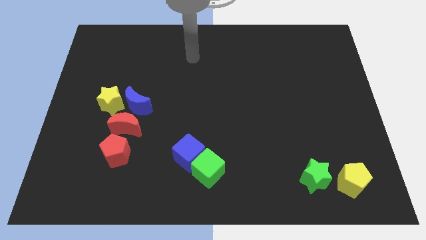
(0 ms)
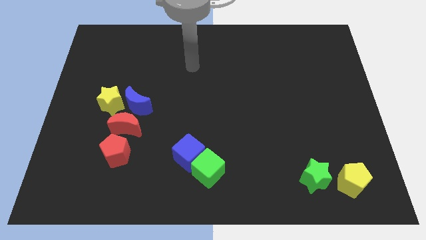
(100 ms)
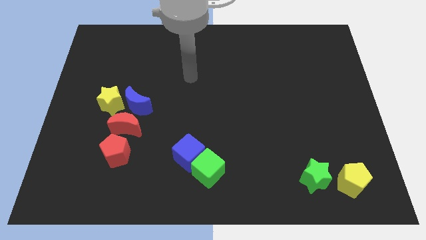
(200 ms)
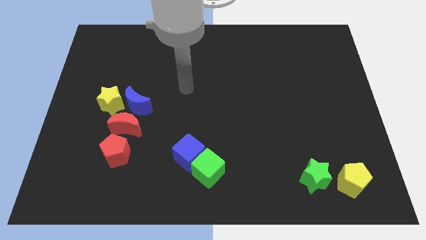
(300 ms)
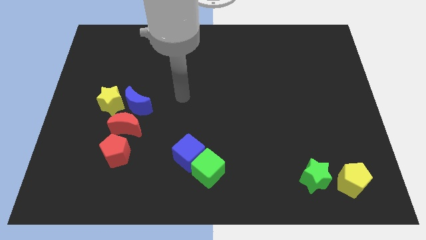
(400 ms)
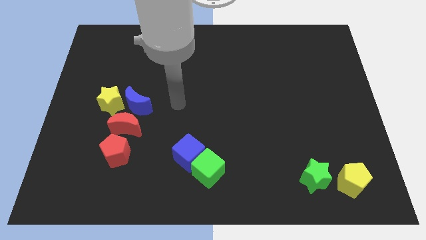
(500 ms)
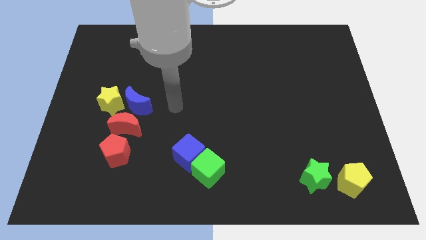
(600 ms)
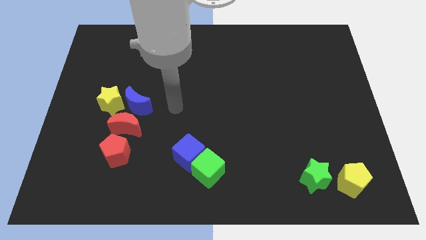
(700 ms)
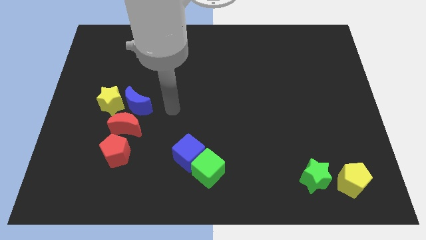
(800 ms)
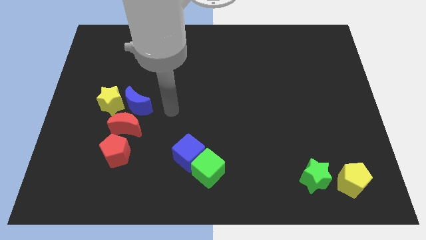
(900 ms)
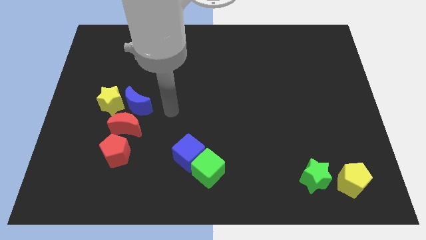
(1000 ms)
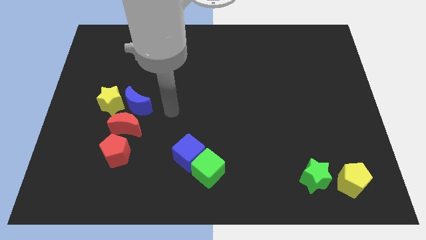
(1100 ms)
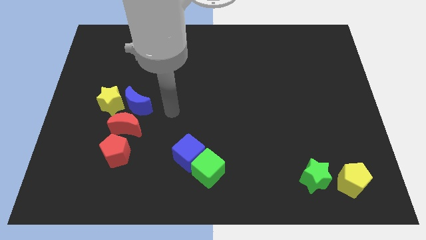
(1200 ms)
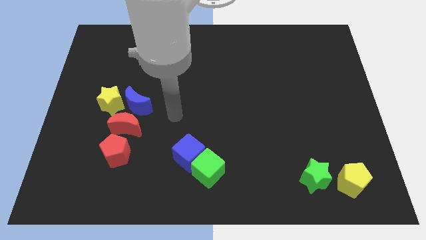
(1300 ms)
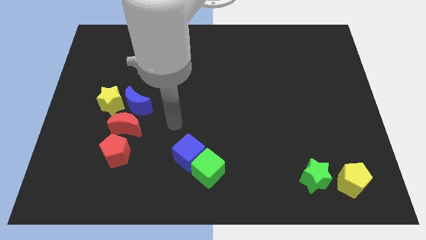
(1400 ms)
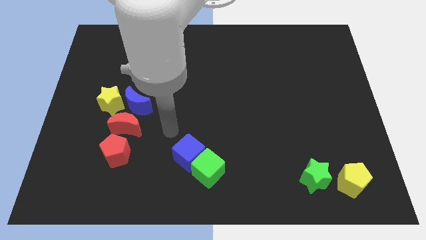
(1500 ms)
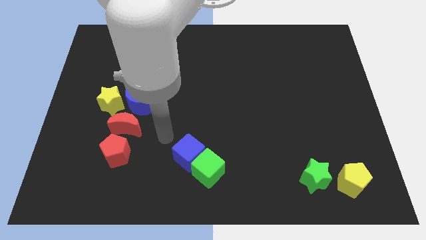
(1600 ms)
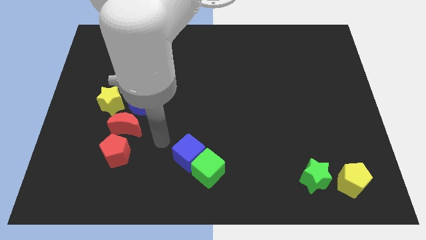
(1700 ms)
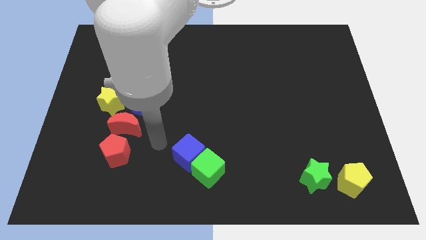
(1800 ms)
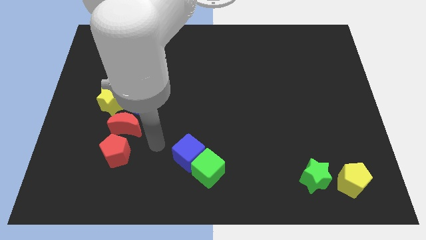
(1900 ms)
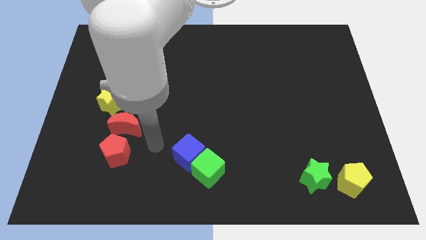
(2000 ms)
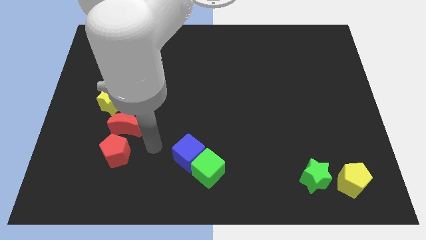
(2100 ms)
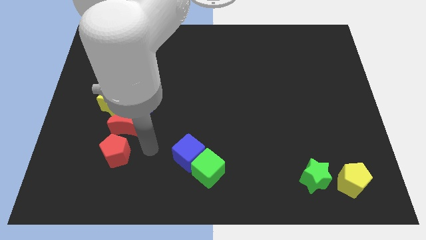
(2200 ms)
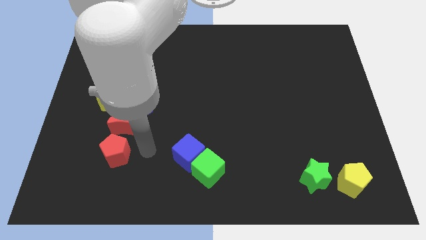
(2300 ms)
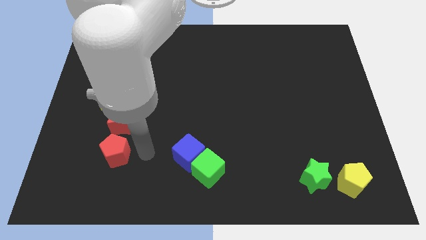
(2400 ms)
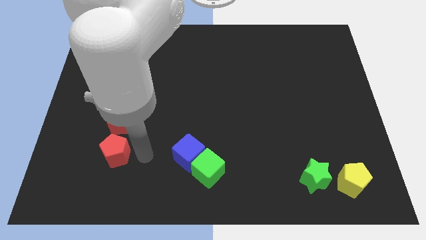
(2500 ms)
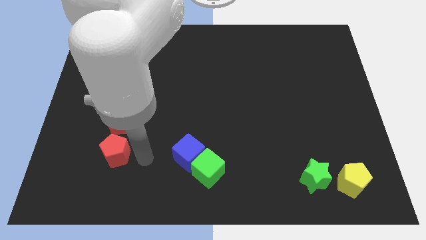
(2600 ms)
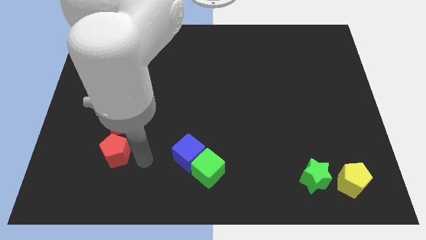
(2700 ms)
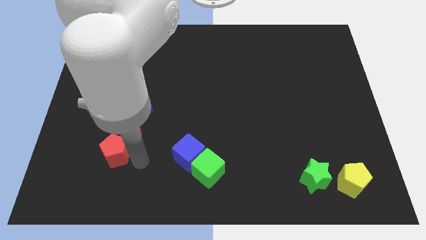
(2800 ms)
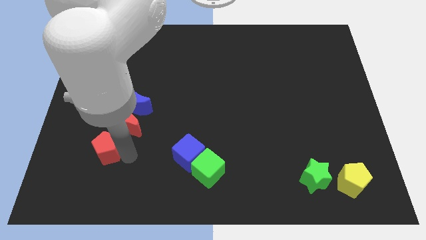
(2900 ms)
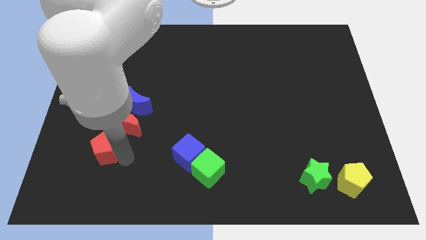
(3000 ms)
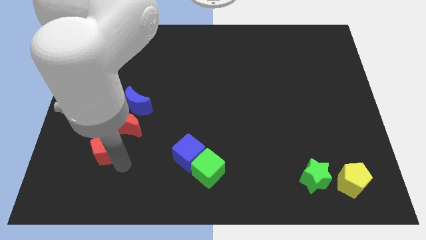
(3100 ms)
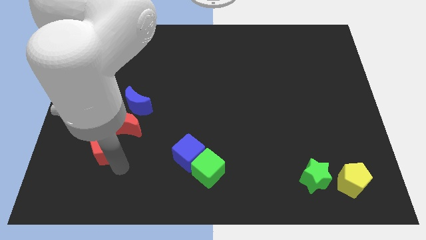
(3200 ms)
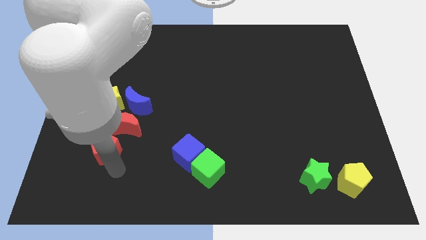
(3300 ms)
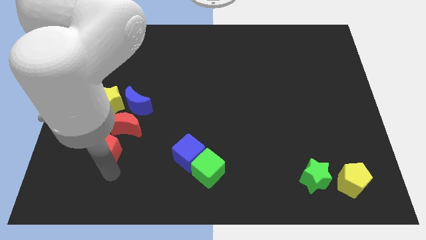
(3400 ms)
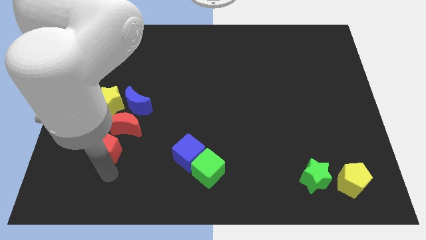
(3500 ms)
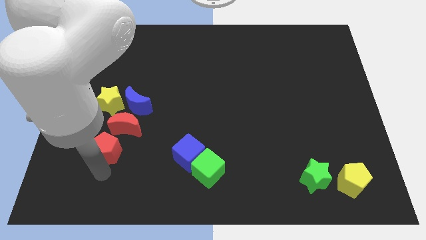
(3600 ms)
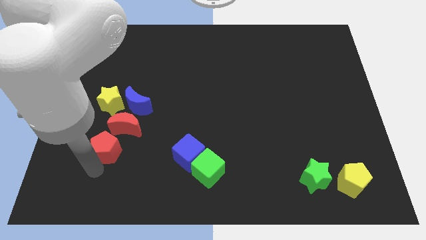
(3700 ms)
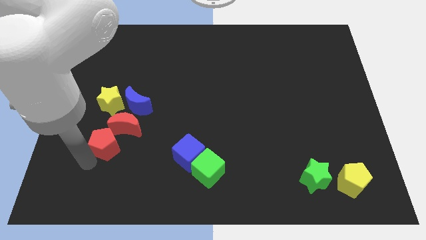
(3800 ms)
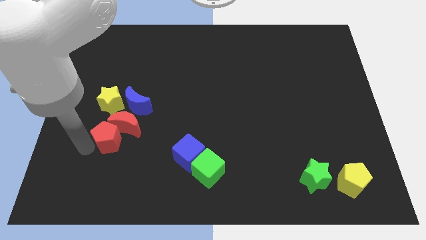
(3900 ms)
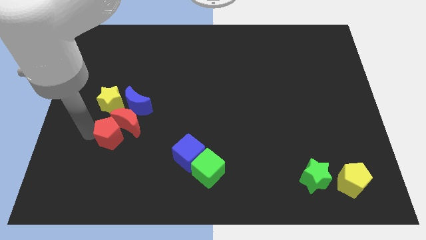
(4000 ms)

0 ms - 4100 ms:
move red pentagon into the red moon

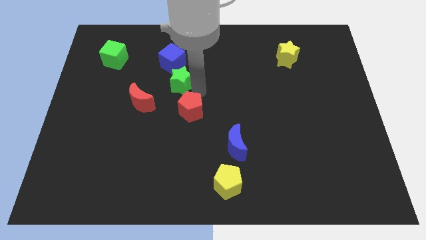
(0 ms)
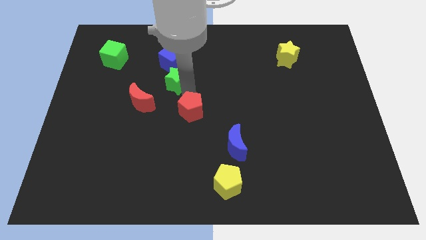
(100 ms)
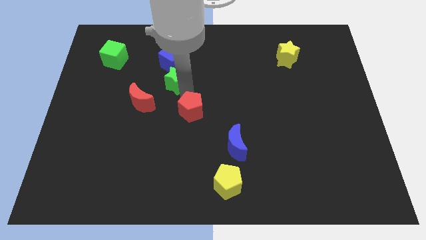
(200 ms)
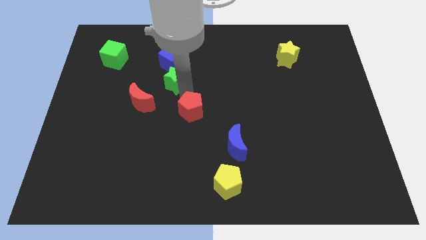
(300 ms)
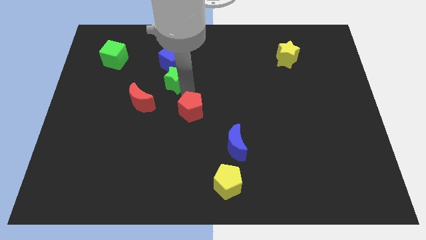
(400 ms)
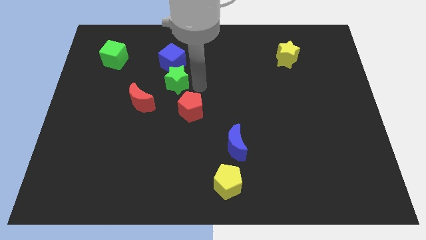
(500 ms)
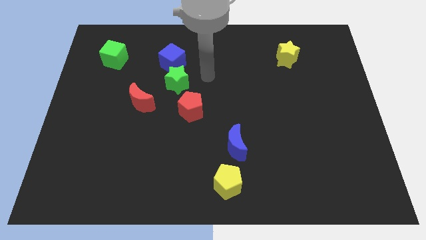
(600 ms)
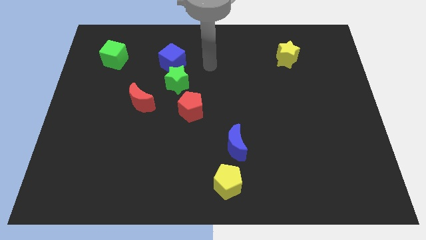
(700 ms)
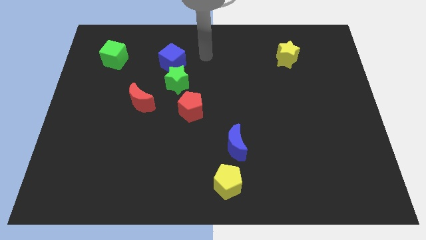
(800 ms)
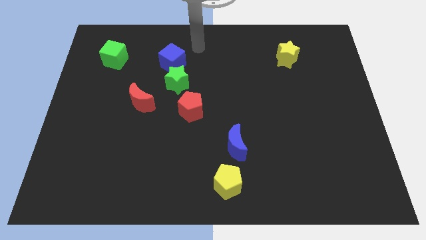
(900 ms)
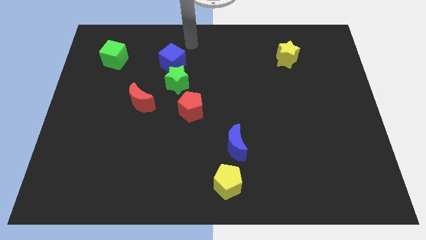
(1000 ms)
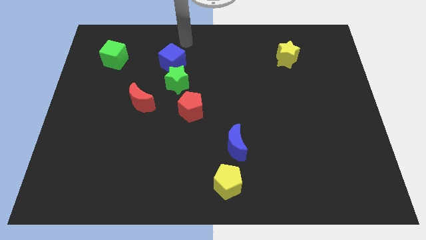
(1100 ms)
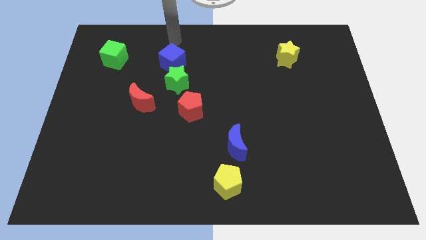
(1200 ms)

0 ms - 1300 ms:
slide the green star slightly to the left

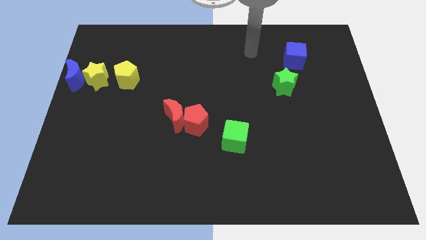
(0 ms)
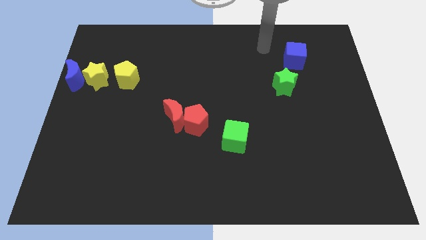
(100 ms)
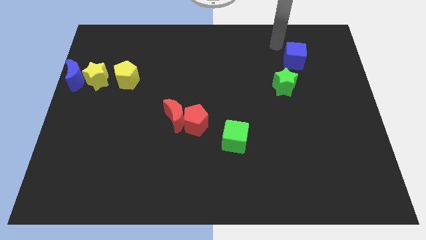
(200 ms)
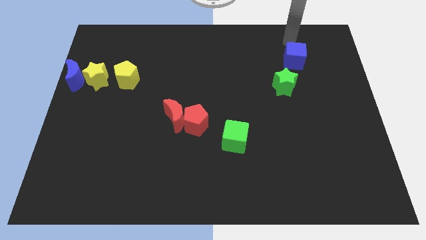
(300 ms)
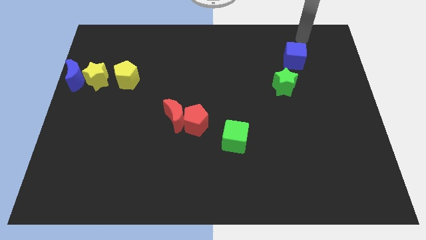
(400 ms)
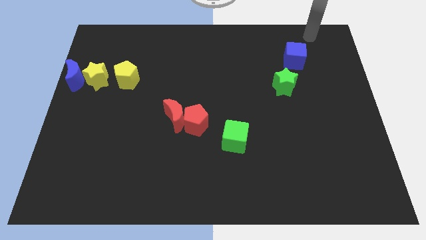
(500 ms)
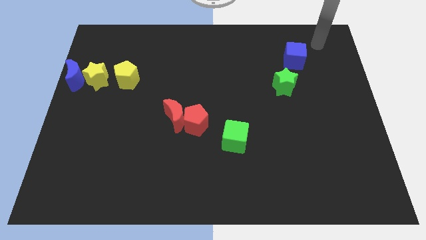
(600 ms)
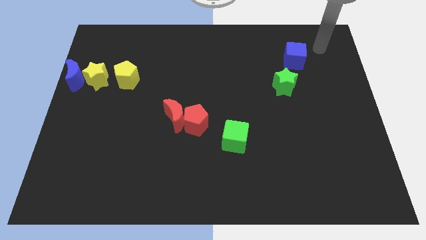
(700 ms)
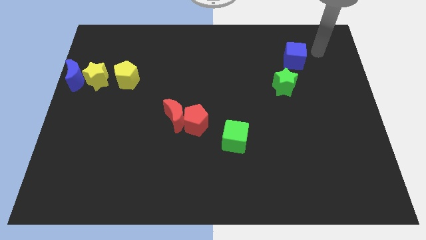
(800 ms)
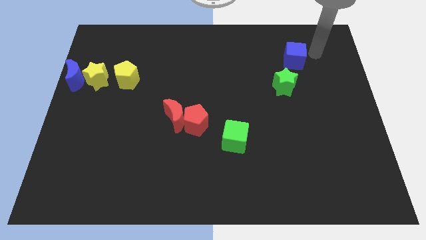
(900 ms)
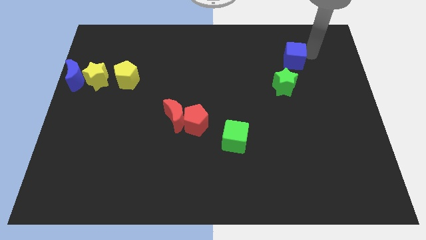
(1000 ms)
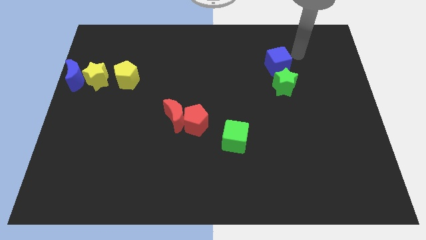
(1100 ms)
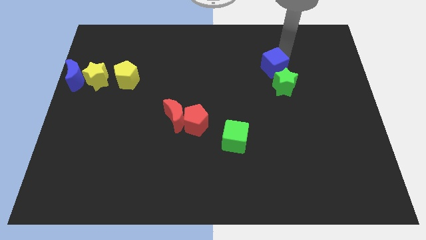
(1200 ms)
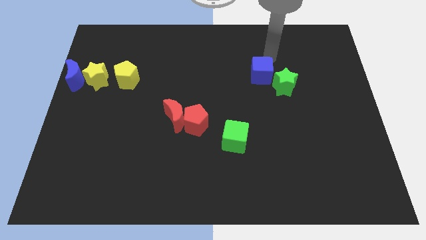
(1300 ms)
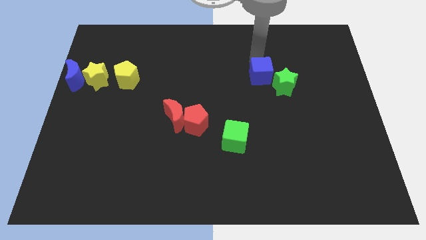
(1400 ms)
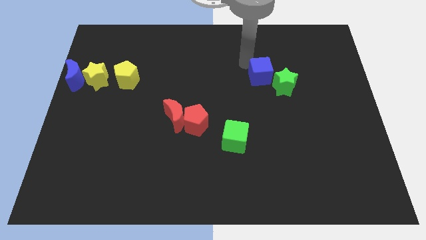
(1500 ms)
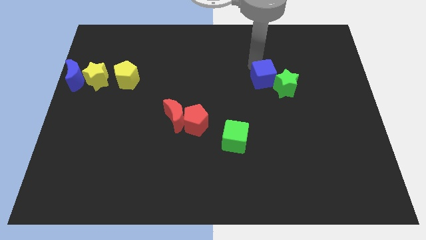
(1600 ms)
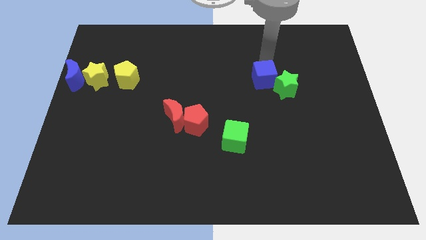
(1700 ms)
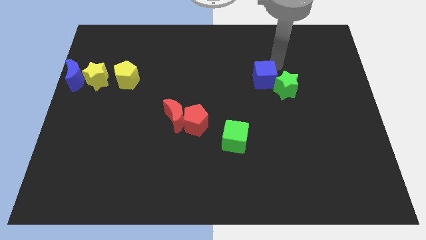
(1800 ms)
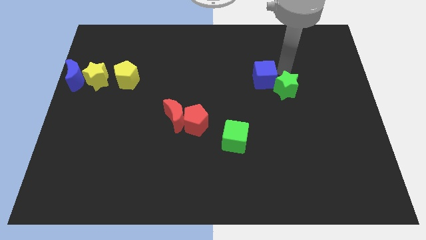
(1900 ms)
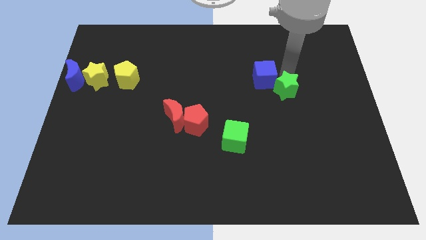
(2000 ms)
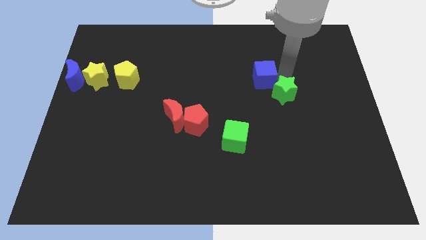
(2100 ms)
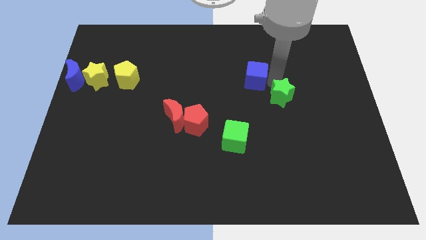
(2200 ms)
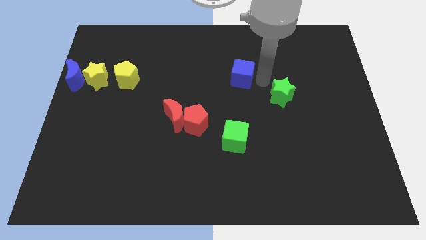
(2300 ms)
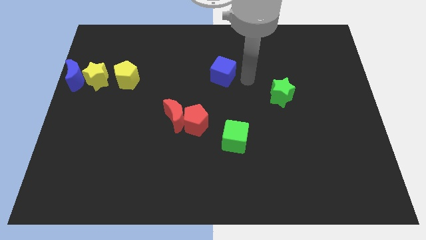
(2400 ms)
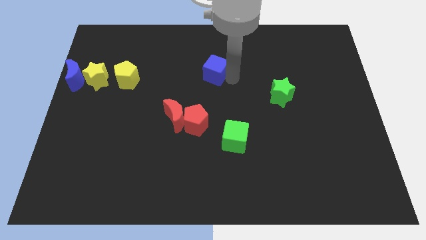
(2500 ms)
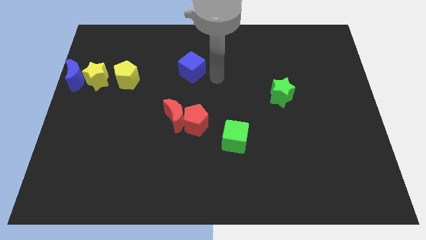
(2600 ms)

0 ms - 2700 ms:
move the blue cube to the vertical top side of the red pentagon

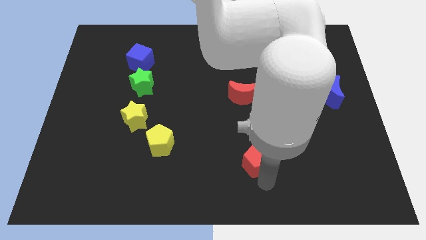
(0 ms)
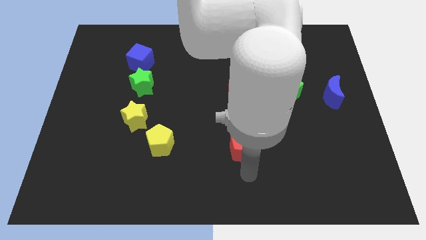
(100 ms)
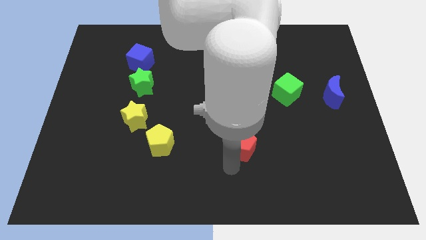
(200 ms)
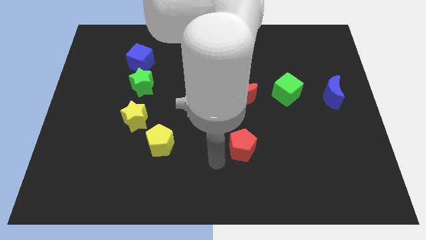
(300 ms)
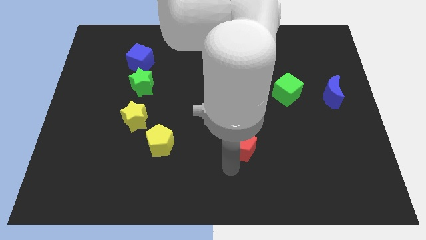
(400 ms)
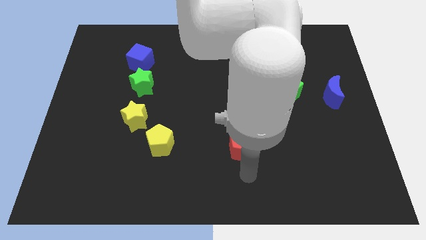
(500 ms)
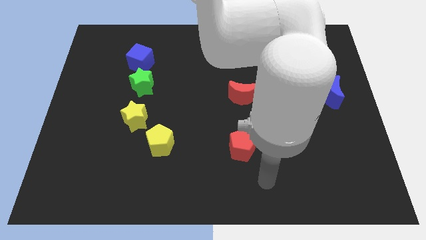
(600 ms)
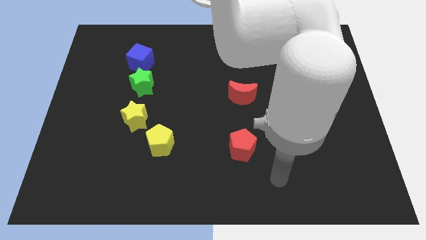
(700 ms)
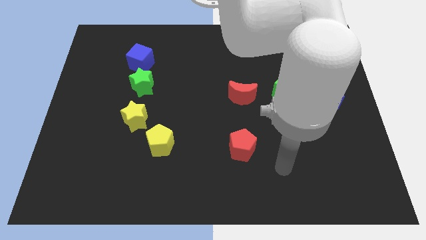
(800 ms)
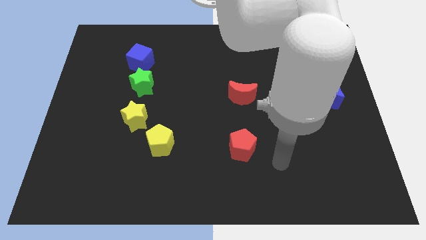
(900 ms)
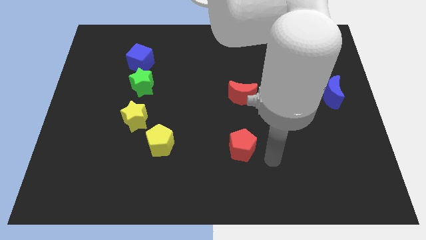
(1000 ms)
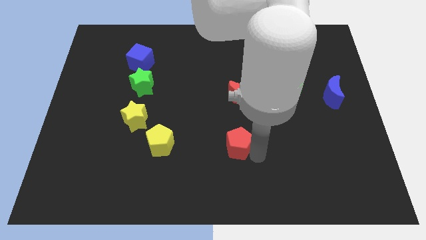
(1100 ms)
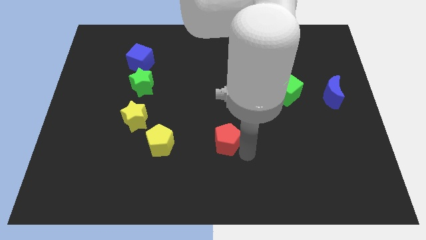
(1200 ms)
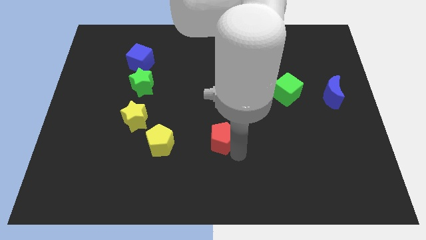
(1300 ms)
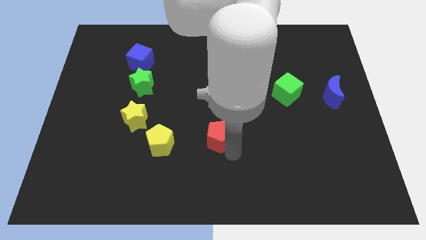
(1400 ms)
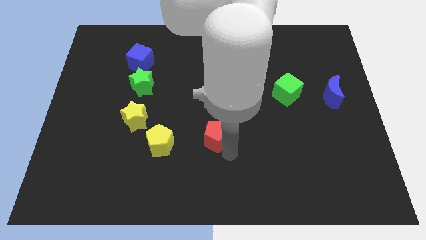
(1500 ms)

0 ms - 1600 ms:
slide red pentagon diagonally bottom left to the red moon
